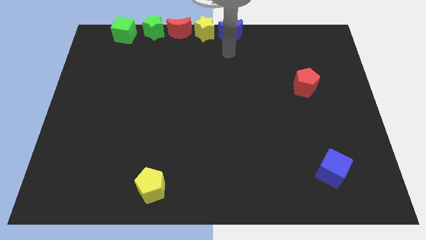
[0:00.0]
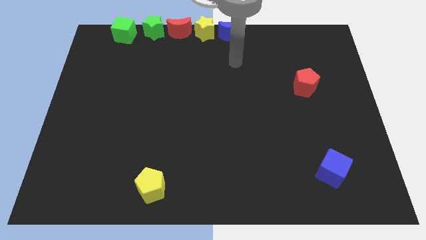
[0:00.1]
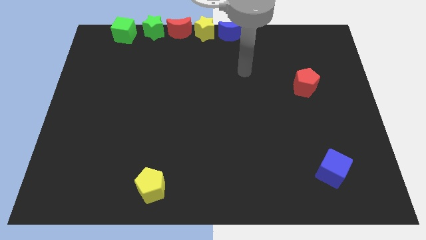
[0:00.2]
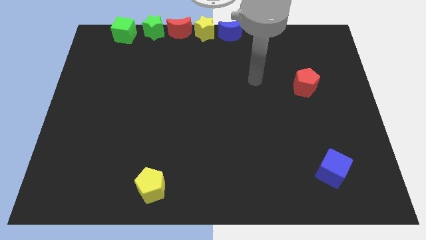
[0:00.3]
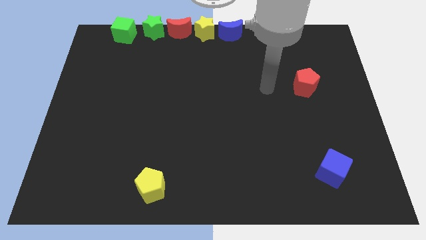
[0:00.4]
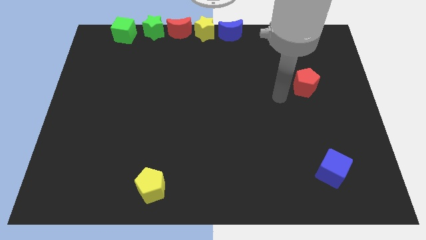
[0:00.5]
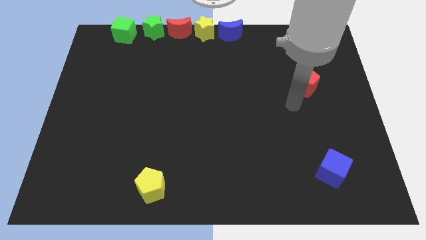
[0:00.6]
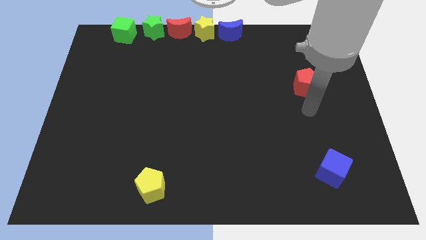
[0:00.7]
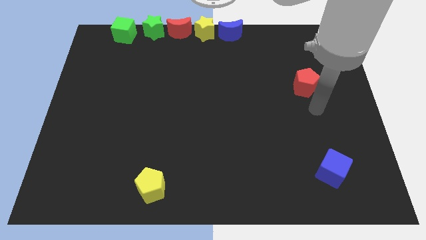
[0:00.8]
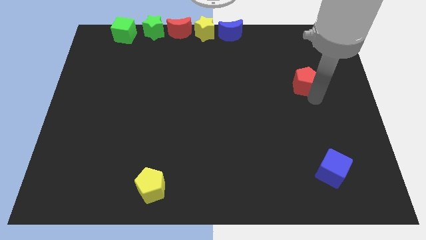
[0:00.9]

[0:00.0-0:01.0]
tap the red pentagon

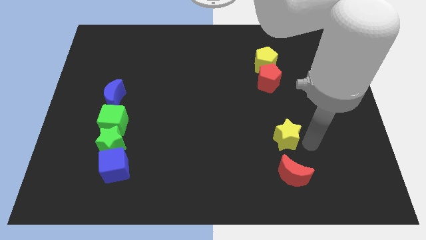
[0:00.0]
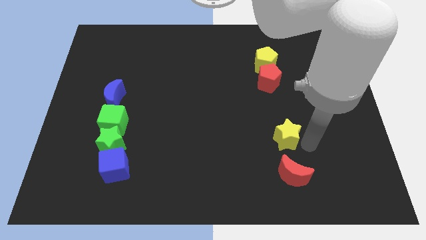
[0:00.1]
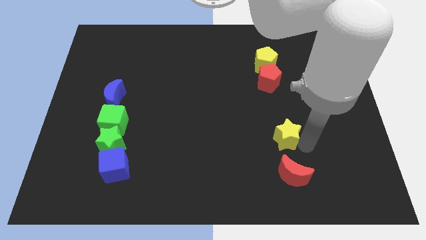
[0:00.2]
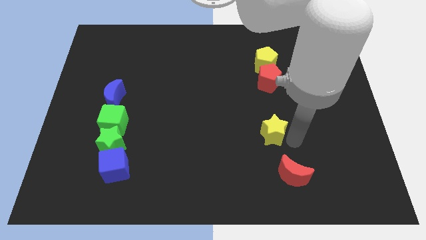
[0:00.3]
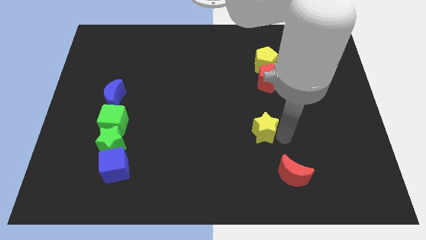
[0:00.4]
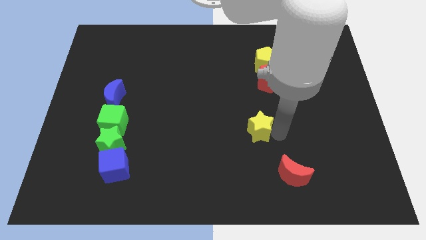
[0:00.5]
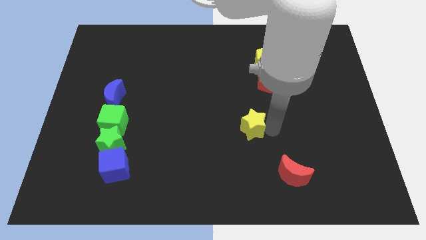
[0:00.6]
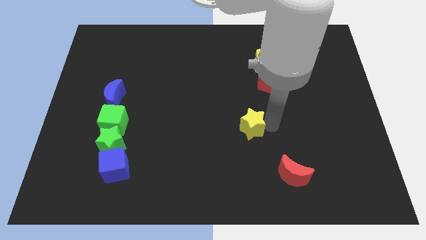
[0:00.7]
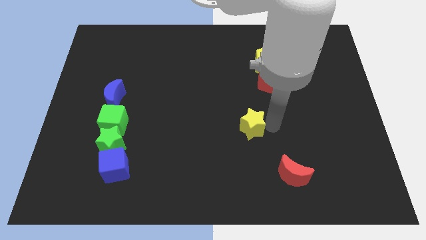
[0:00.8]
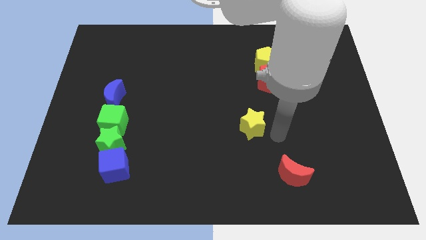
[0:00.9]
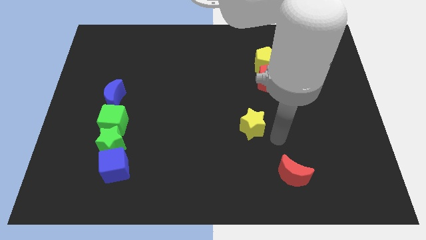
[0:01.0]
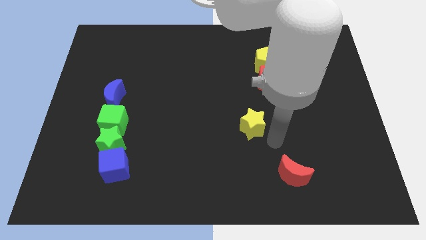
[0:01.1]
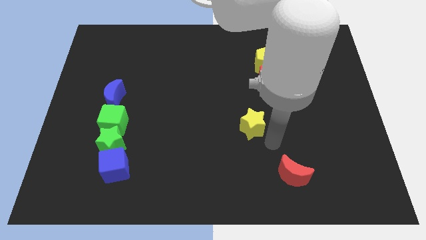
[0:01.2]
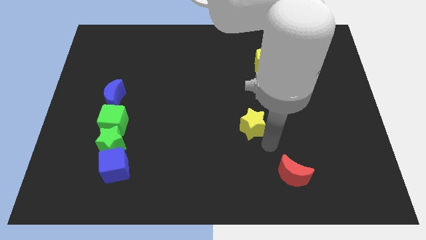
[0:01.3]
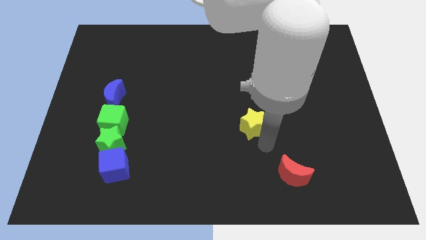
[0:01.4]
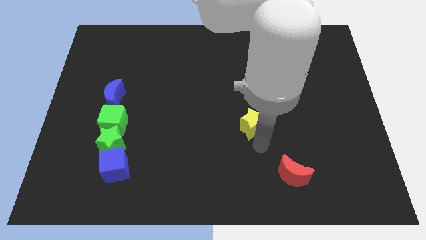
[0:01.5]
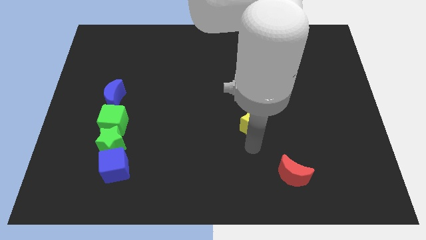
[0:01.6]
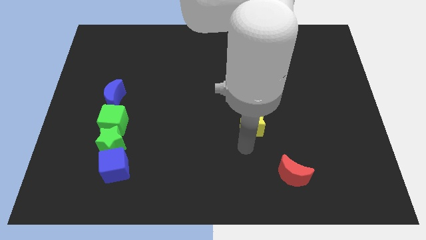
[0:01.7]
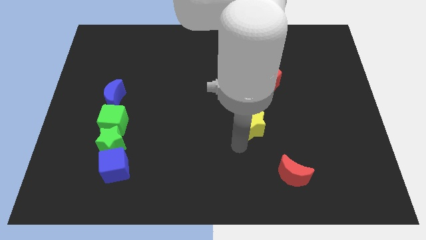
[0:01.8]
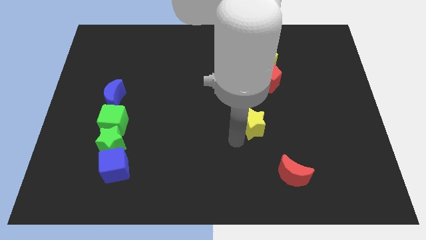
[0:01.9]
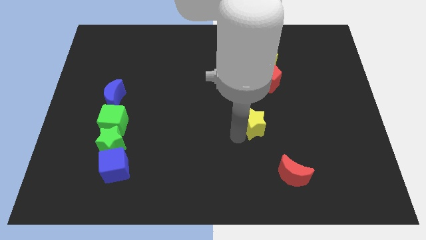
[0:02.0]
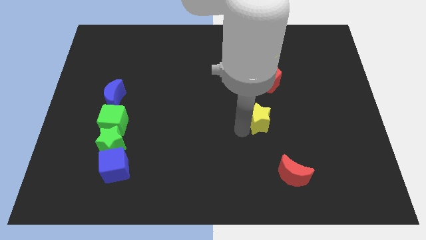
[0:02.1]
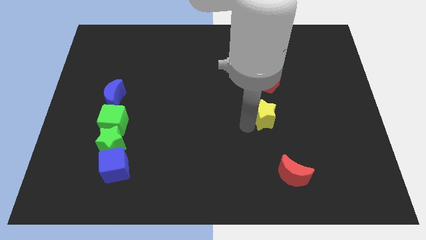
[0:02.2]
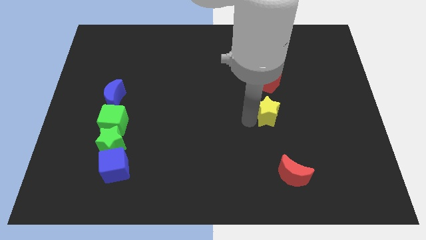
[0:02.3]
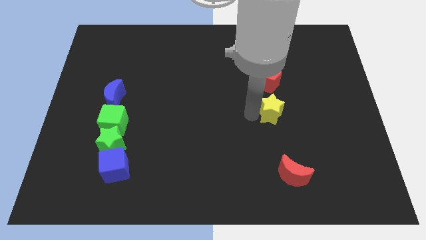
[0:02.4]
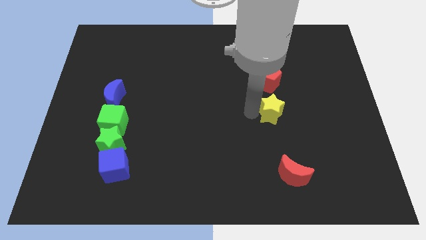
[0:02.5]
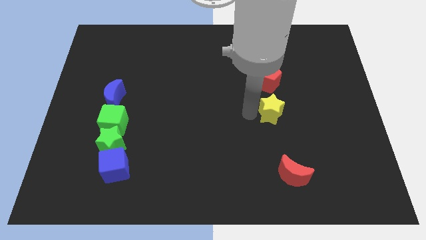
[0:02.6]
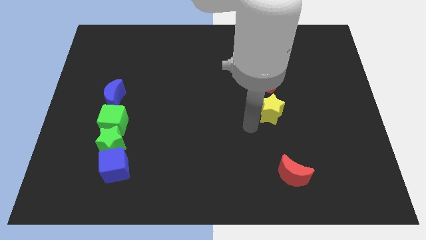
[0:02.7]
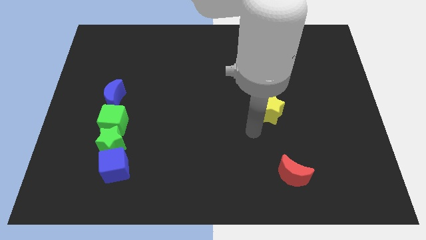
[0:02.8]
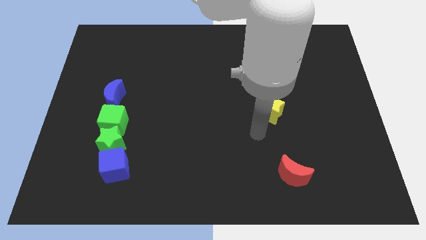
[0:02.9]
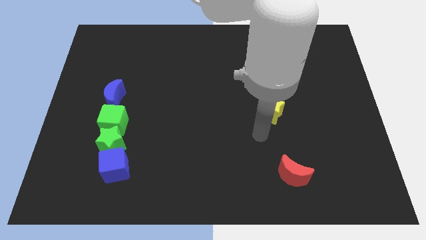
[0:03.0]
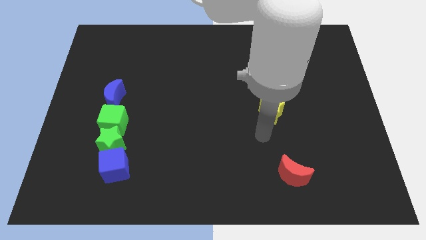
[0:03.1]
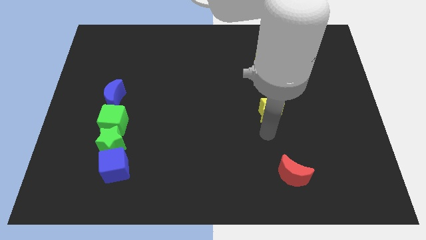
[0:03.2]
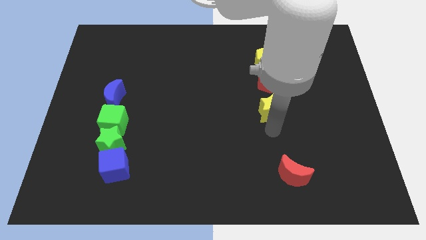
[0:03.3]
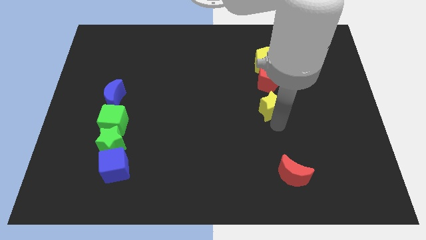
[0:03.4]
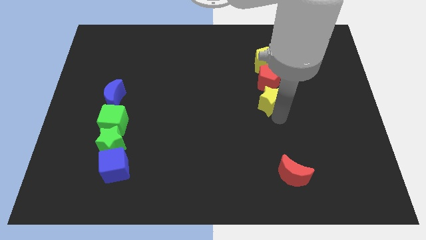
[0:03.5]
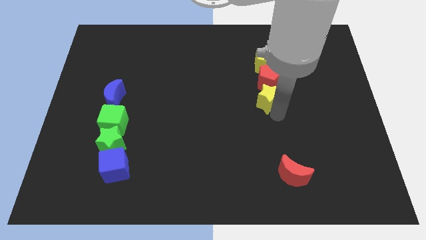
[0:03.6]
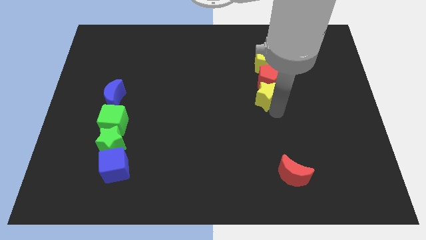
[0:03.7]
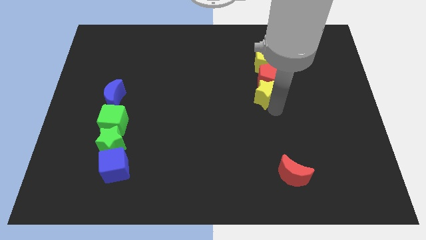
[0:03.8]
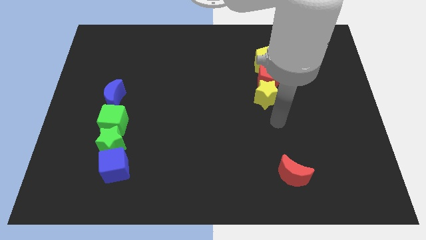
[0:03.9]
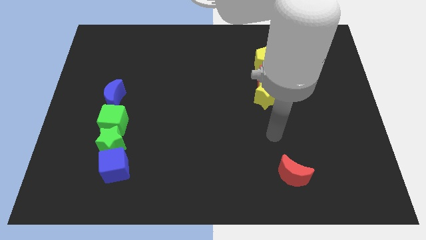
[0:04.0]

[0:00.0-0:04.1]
move the yellow star towards the red pentagon

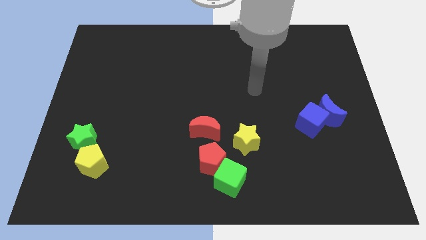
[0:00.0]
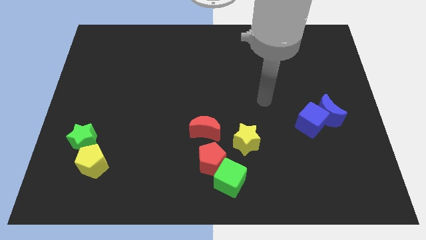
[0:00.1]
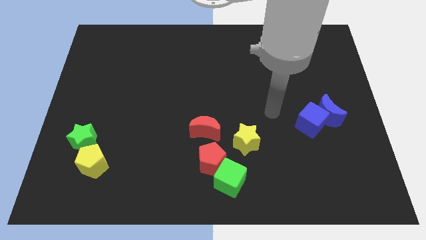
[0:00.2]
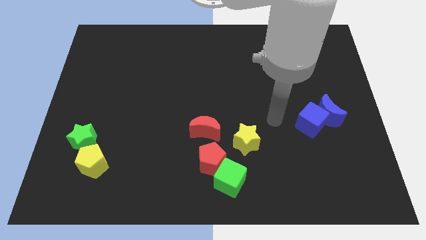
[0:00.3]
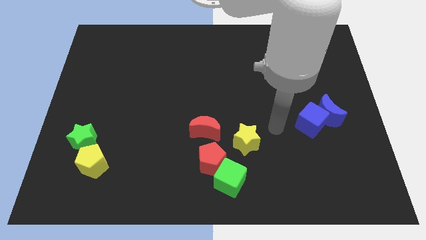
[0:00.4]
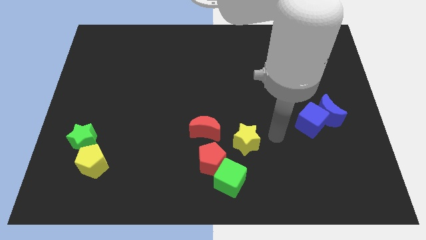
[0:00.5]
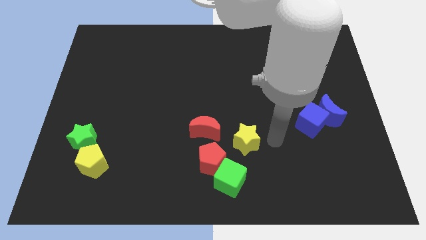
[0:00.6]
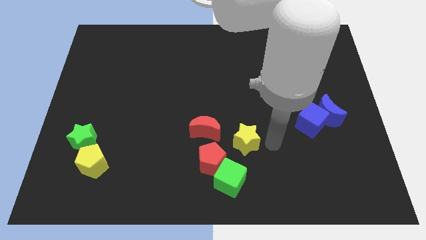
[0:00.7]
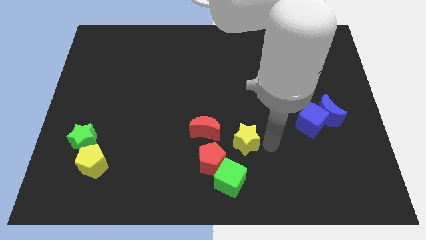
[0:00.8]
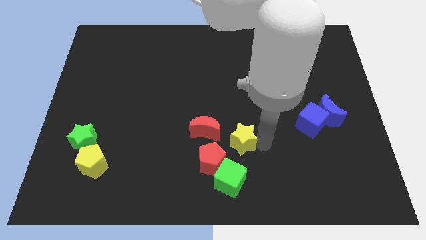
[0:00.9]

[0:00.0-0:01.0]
place arm on right side of yellow star

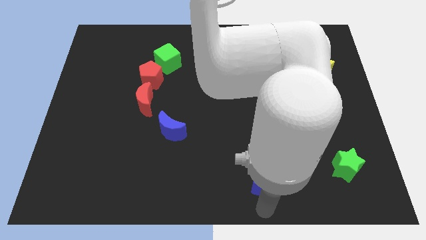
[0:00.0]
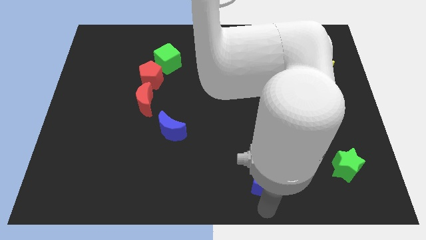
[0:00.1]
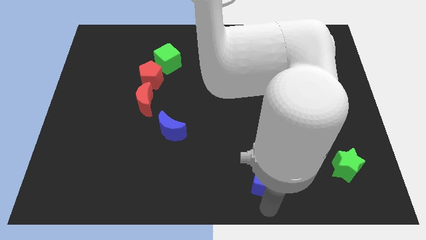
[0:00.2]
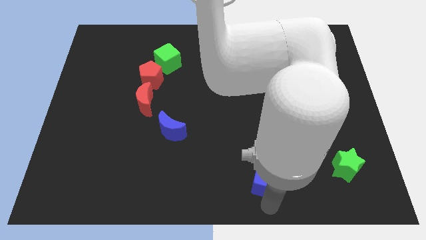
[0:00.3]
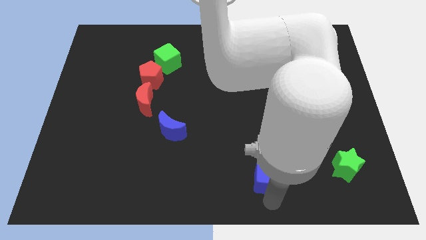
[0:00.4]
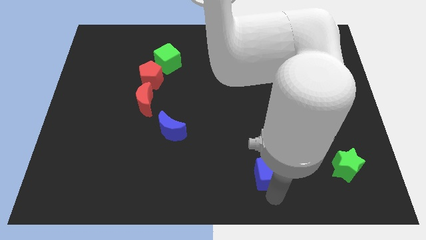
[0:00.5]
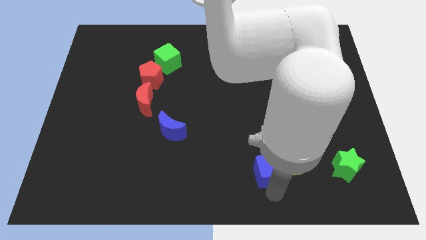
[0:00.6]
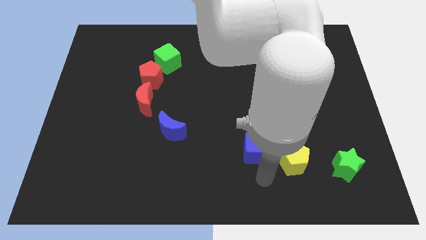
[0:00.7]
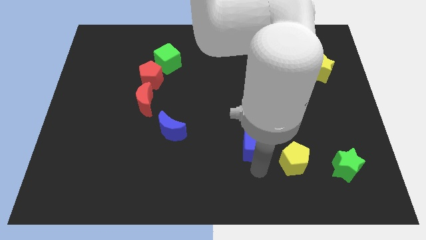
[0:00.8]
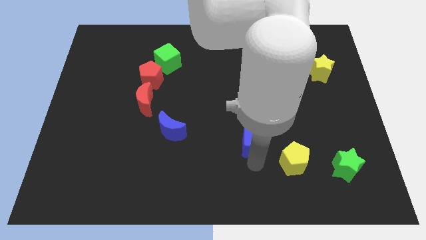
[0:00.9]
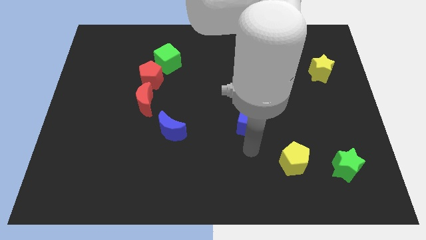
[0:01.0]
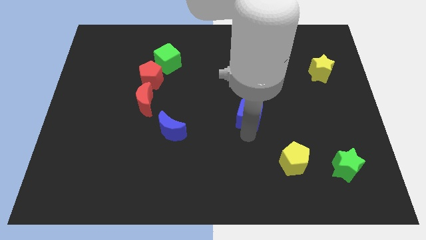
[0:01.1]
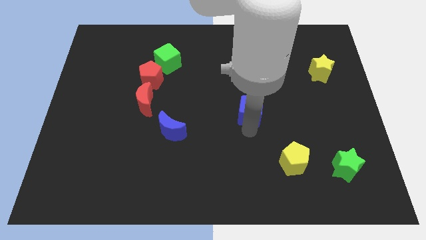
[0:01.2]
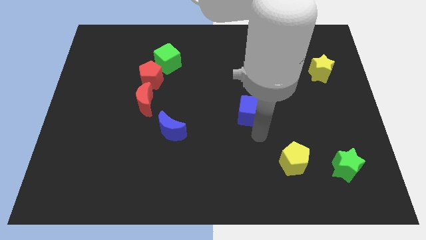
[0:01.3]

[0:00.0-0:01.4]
move the blue cube to the center of the board

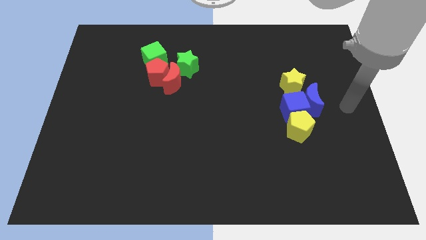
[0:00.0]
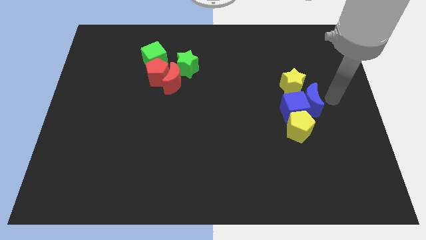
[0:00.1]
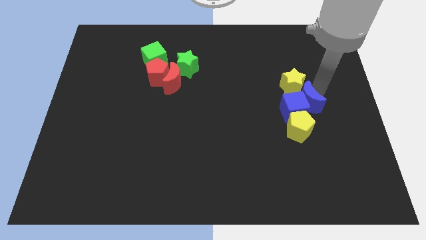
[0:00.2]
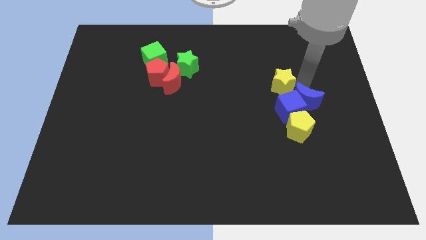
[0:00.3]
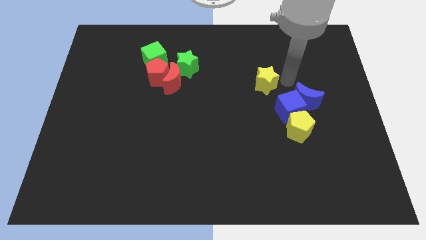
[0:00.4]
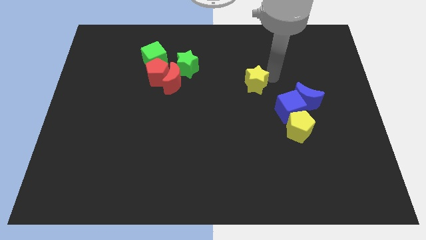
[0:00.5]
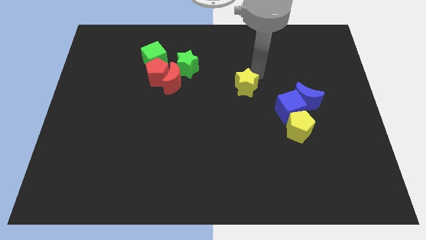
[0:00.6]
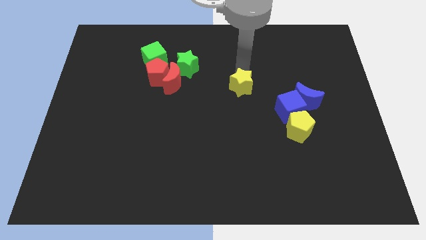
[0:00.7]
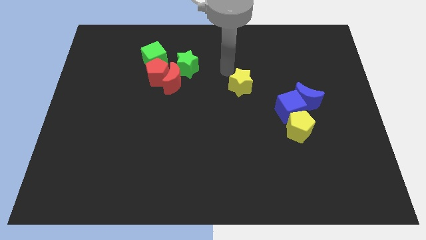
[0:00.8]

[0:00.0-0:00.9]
push the yellow star slightly to the left of the board

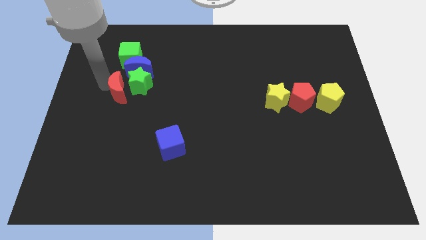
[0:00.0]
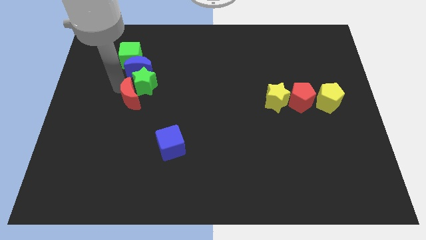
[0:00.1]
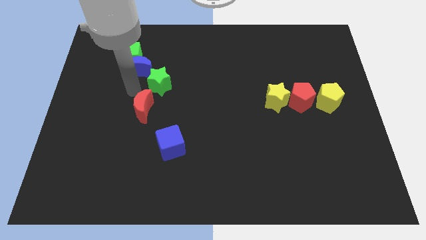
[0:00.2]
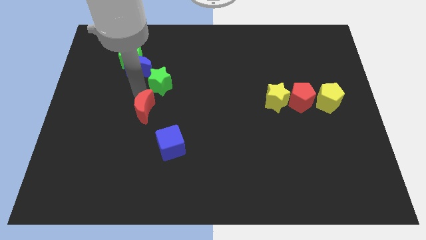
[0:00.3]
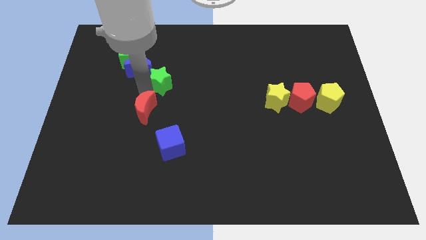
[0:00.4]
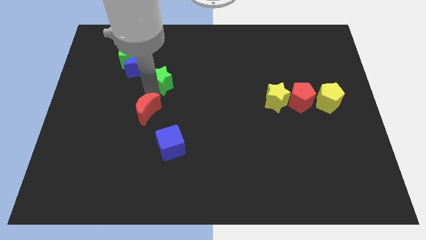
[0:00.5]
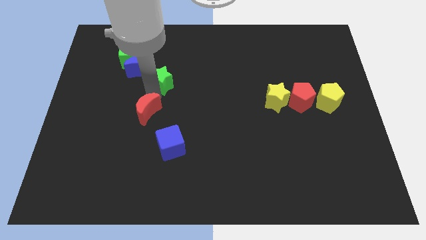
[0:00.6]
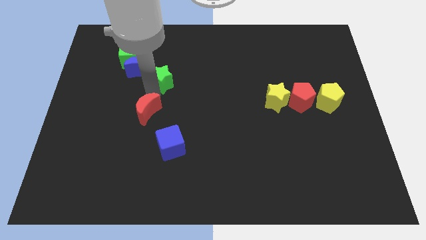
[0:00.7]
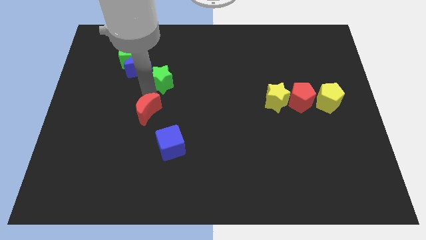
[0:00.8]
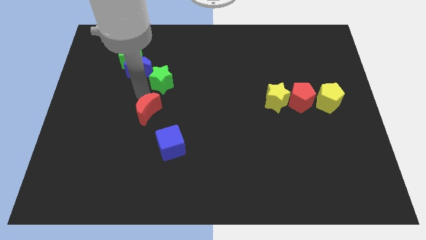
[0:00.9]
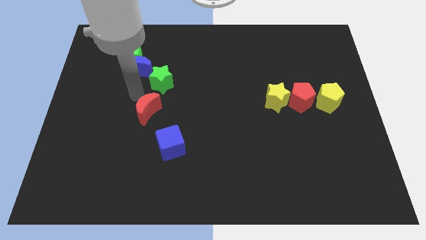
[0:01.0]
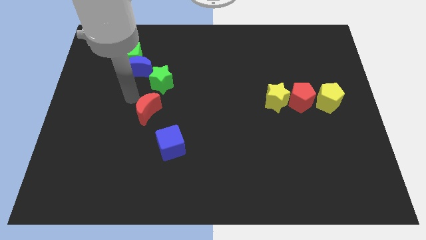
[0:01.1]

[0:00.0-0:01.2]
place the red moon above the blue cube
